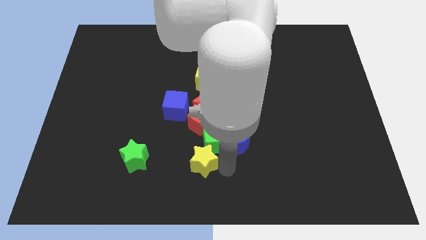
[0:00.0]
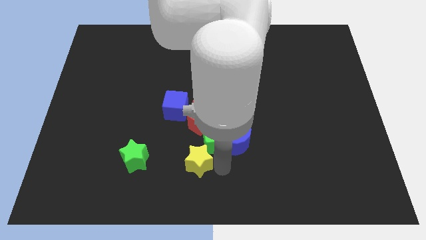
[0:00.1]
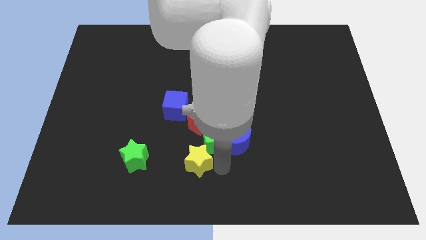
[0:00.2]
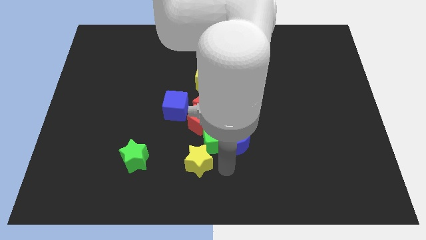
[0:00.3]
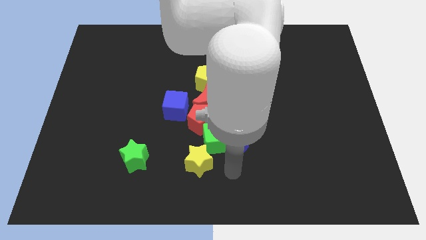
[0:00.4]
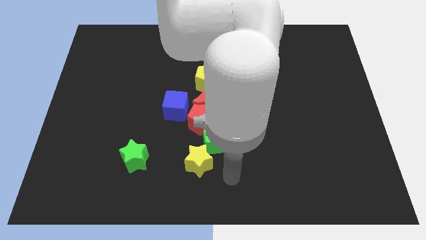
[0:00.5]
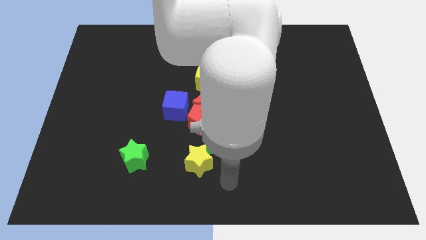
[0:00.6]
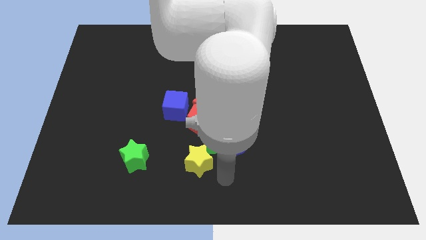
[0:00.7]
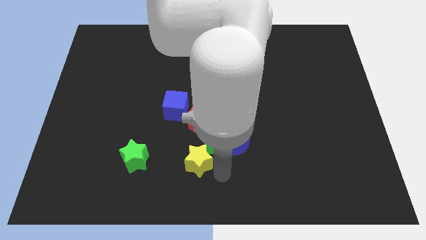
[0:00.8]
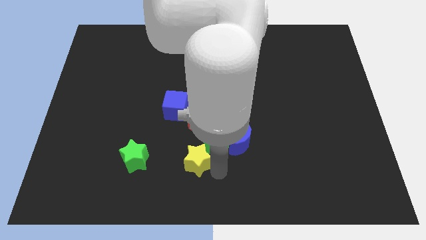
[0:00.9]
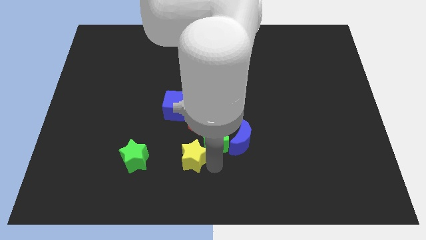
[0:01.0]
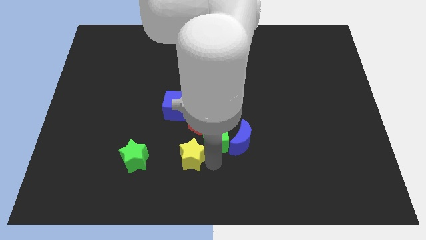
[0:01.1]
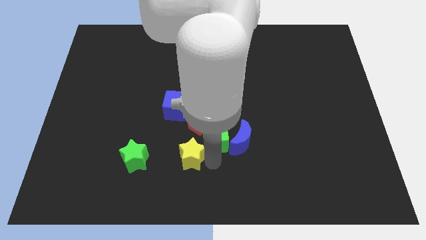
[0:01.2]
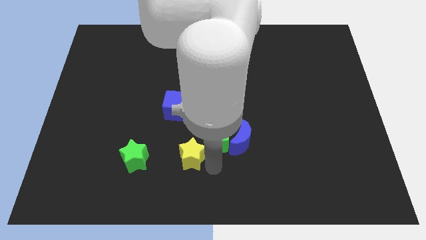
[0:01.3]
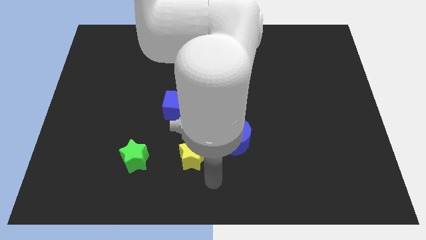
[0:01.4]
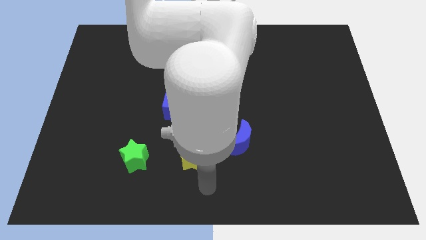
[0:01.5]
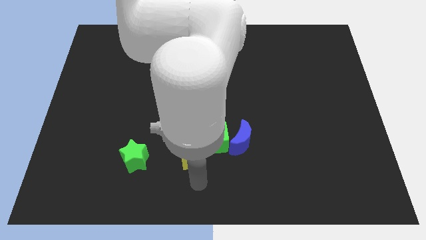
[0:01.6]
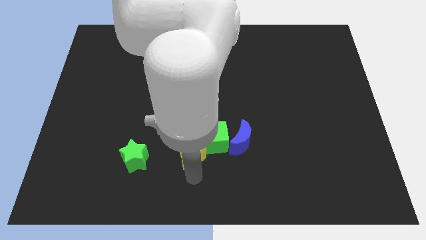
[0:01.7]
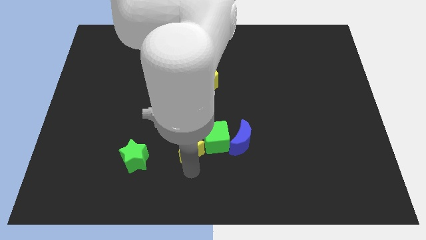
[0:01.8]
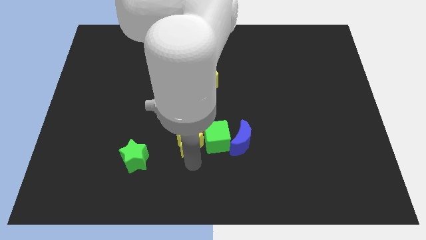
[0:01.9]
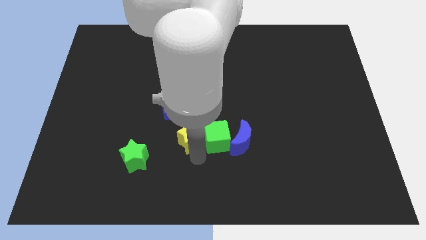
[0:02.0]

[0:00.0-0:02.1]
move yellow star to the left of green cube

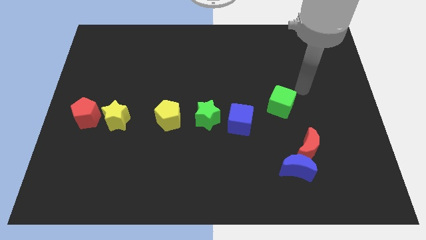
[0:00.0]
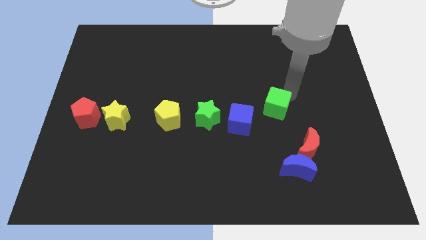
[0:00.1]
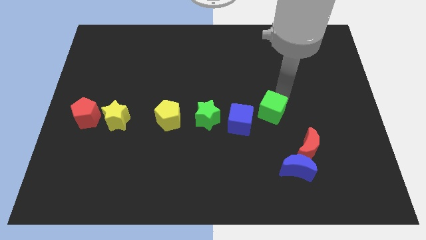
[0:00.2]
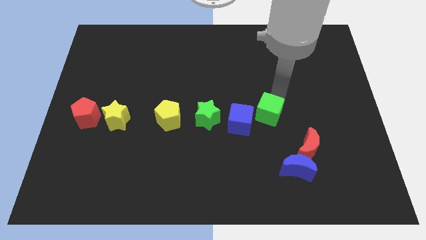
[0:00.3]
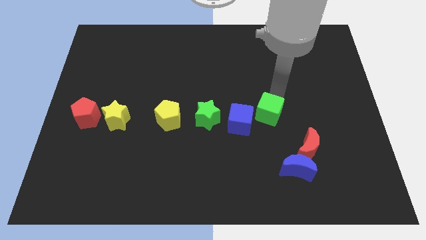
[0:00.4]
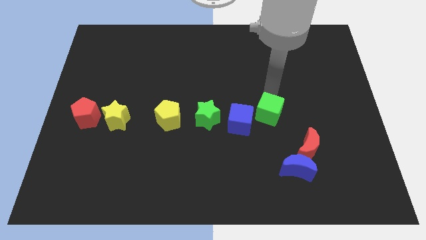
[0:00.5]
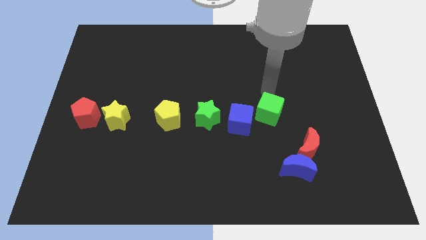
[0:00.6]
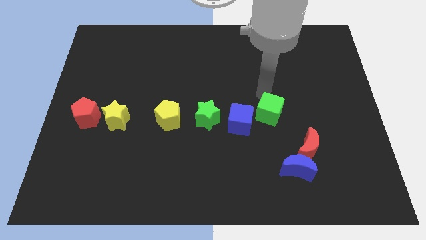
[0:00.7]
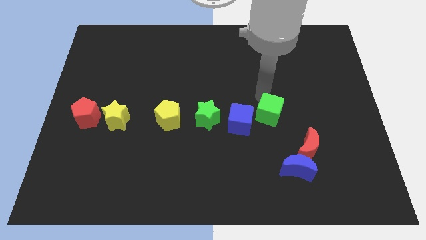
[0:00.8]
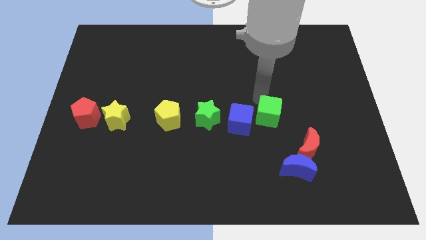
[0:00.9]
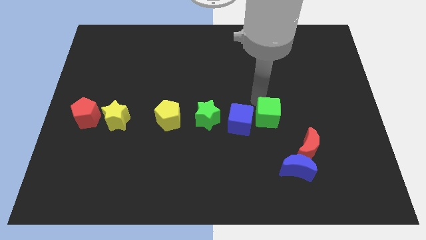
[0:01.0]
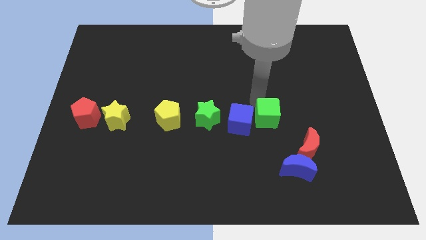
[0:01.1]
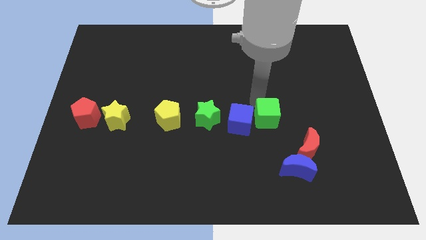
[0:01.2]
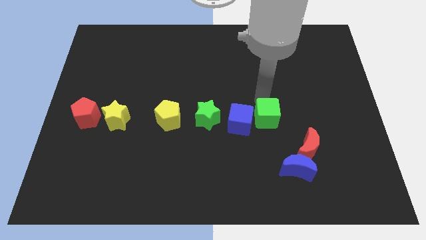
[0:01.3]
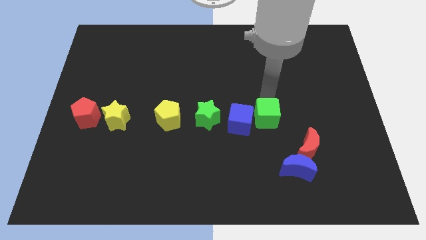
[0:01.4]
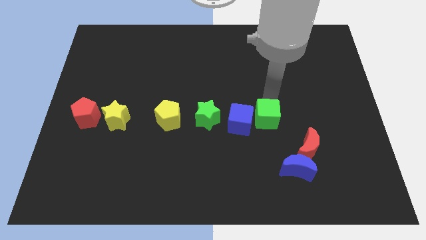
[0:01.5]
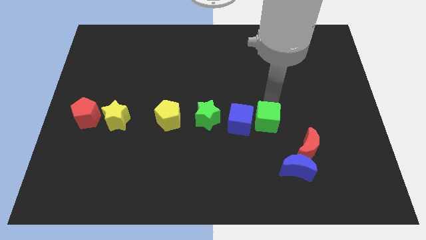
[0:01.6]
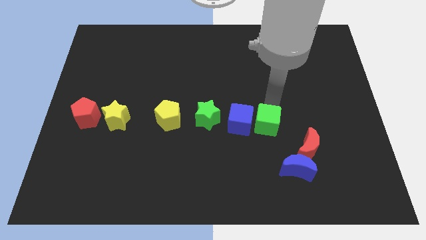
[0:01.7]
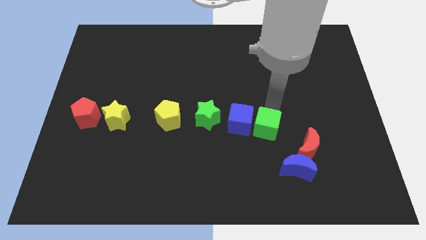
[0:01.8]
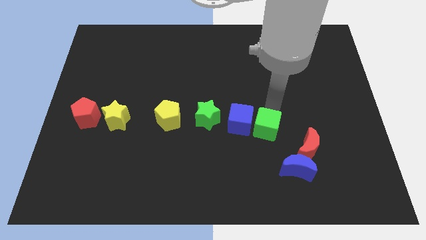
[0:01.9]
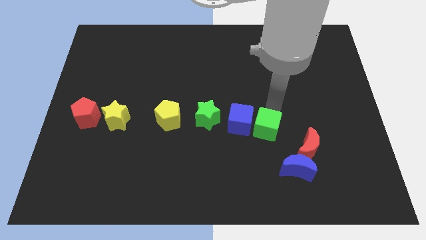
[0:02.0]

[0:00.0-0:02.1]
place the green cube to the right of blue cube

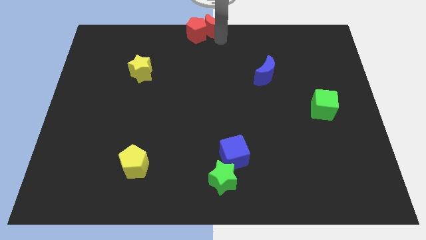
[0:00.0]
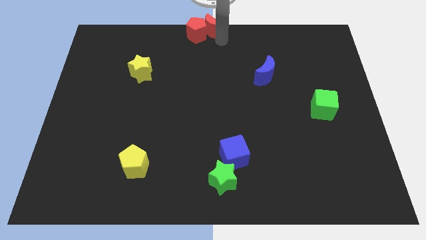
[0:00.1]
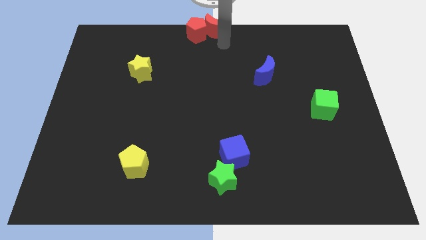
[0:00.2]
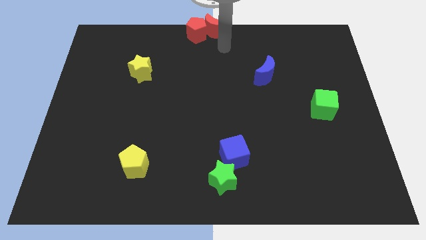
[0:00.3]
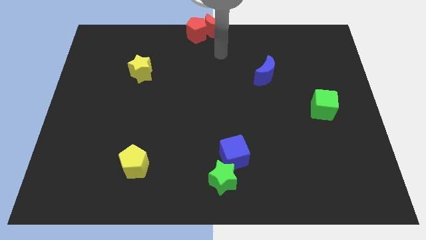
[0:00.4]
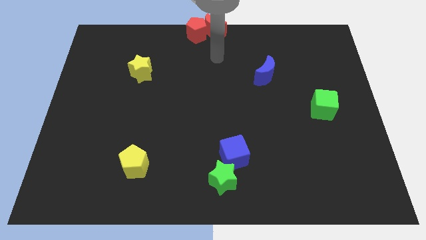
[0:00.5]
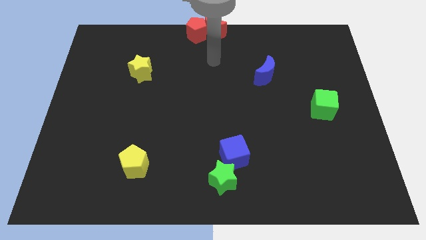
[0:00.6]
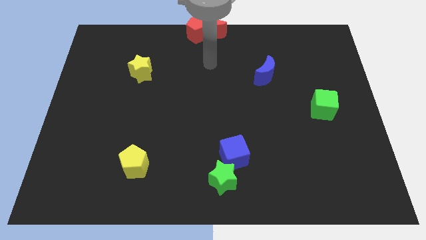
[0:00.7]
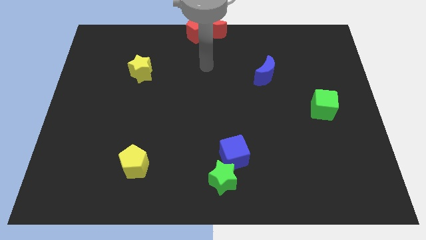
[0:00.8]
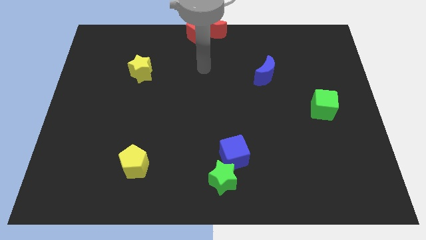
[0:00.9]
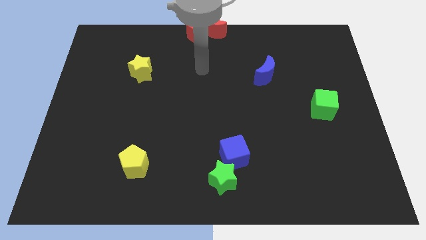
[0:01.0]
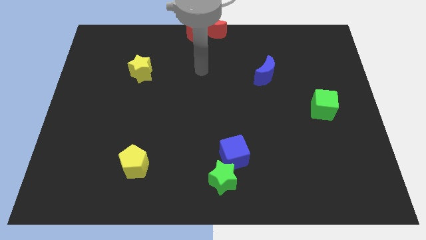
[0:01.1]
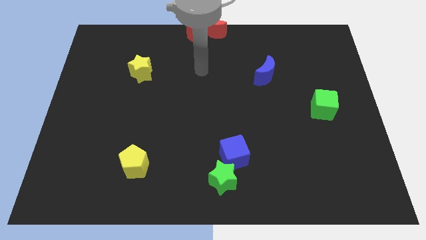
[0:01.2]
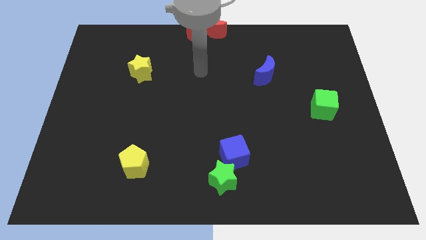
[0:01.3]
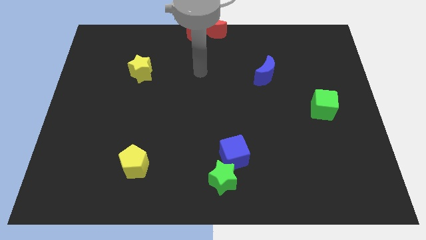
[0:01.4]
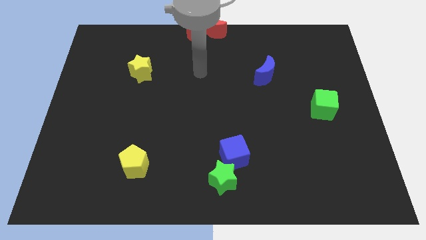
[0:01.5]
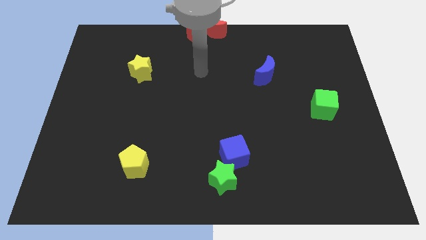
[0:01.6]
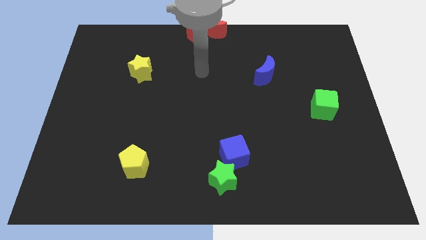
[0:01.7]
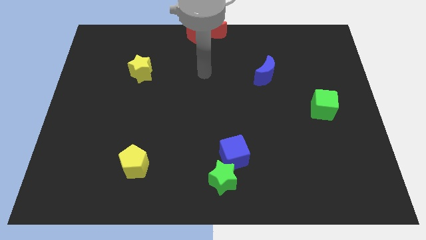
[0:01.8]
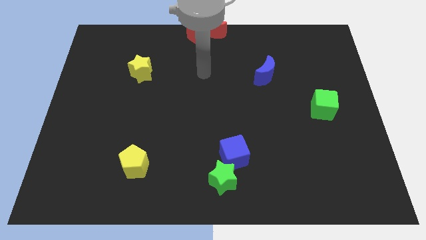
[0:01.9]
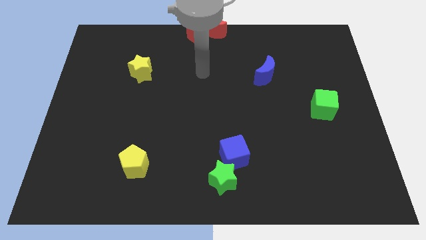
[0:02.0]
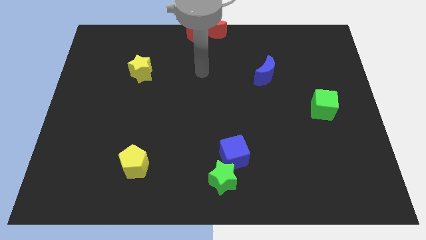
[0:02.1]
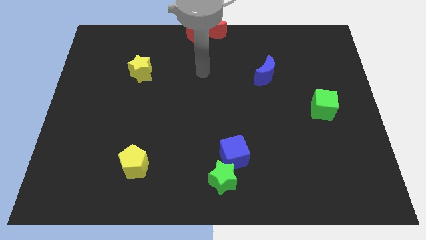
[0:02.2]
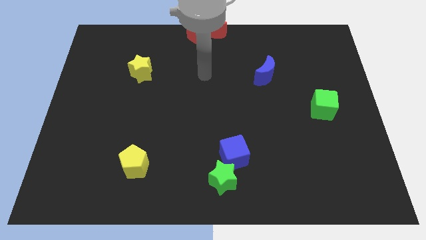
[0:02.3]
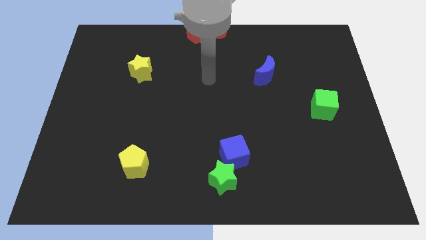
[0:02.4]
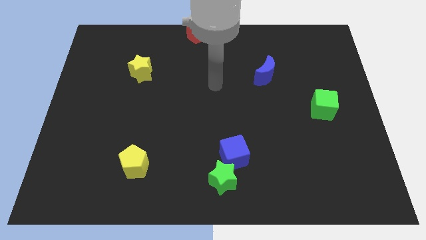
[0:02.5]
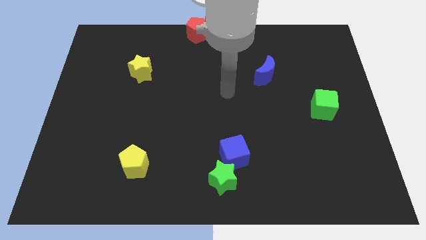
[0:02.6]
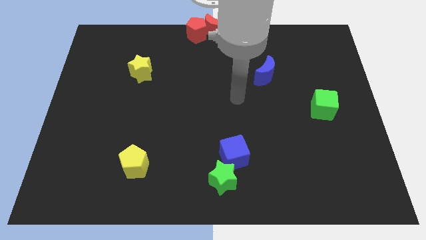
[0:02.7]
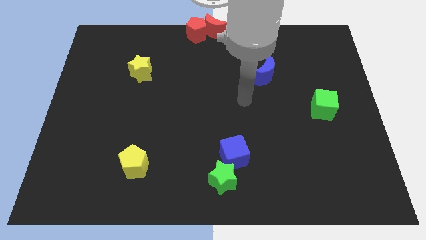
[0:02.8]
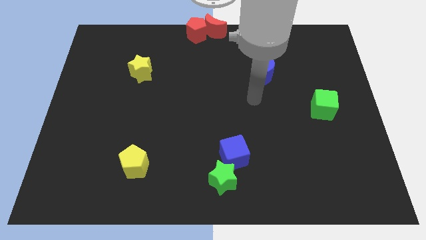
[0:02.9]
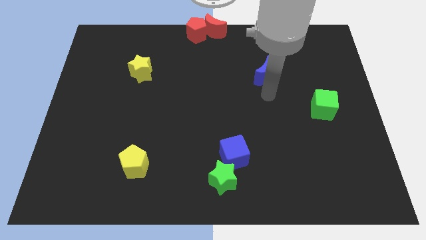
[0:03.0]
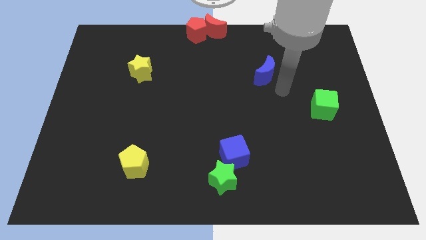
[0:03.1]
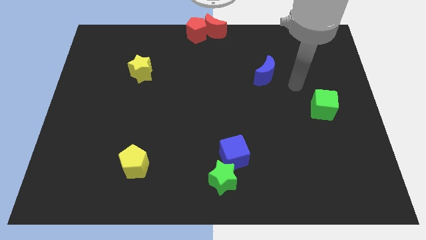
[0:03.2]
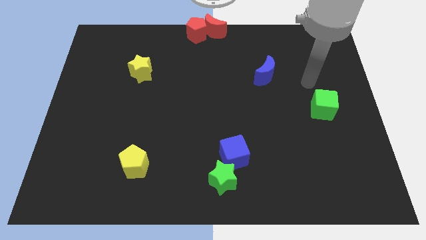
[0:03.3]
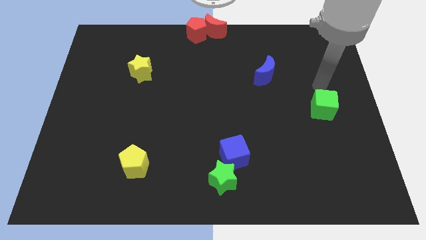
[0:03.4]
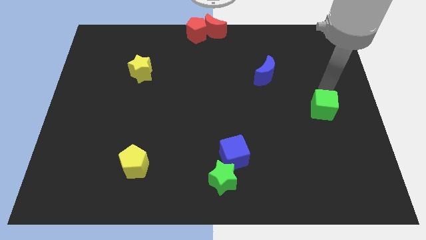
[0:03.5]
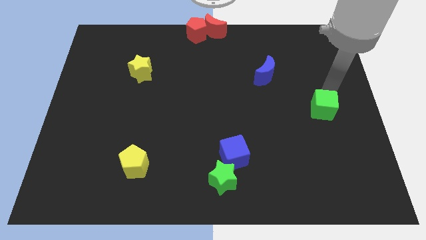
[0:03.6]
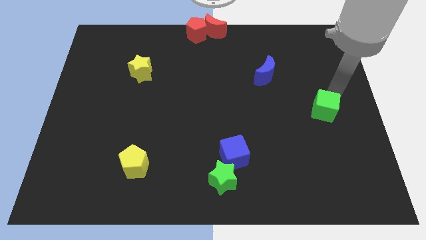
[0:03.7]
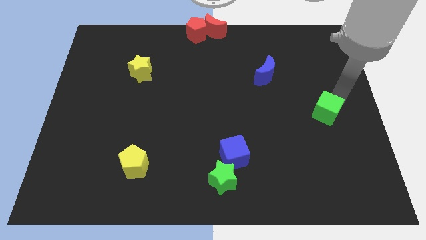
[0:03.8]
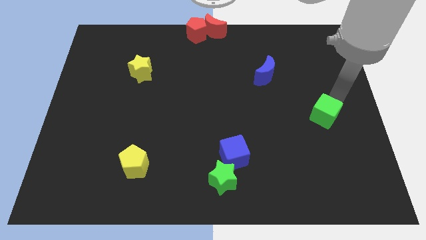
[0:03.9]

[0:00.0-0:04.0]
move your arm to the green cube

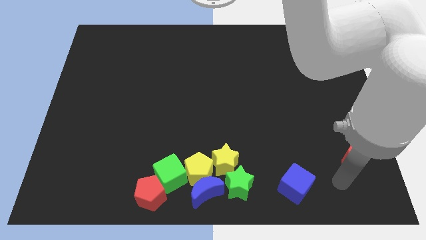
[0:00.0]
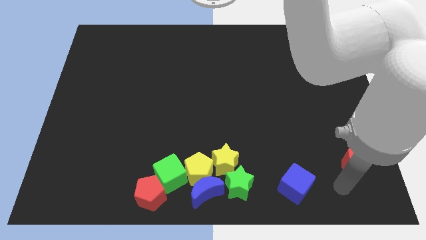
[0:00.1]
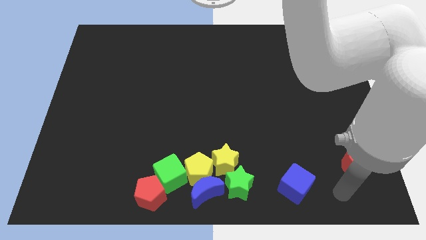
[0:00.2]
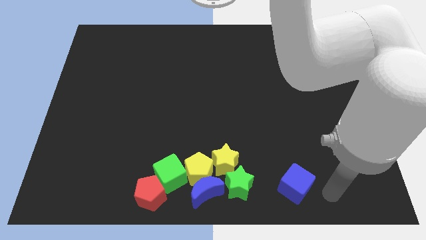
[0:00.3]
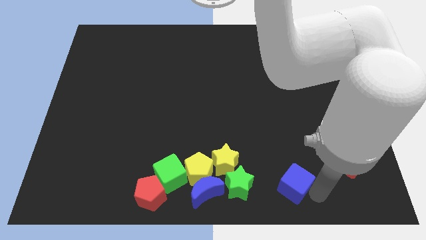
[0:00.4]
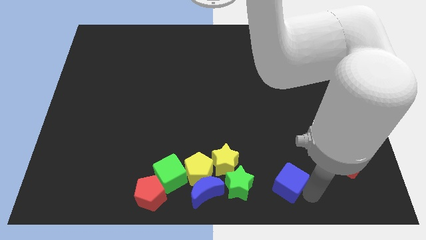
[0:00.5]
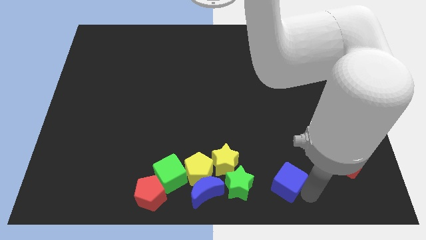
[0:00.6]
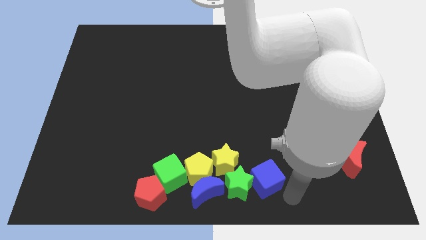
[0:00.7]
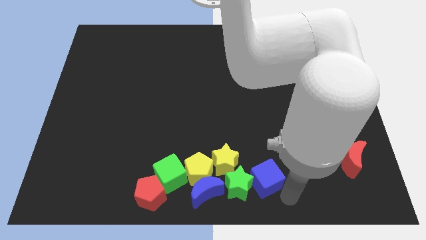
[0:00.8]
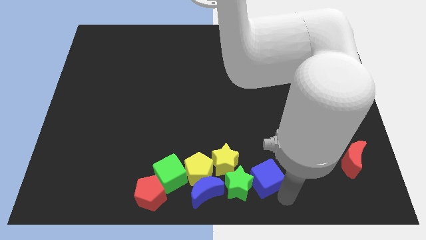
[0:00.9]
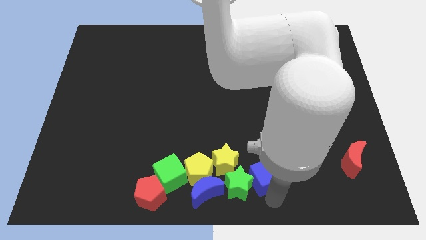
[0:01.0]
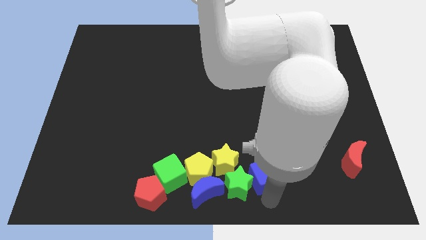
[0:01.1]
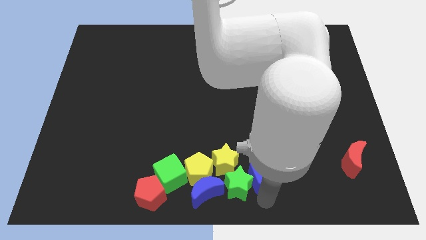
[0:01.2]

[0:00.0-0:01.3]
place the blue cube to the right of the green star
